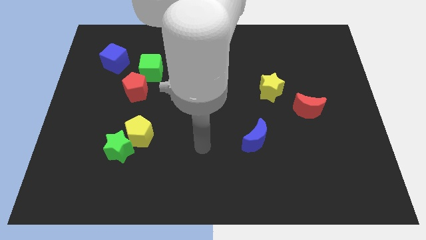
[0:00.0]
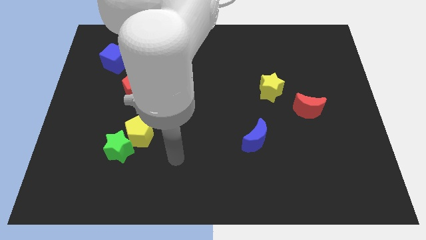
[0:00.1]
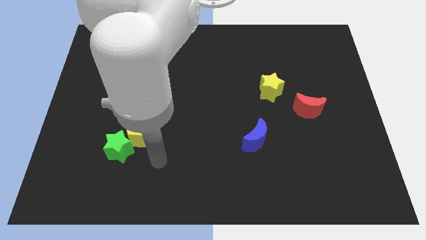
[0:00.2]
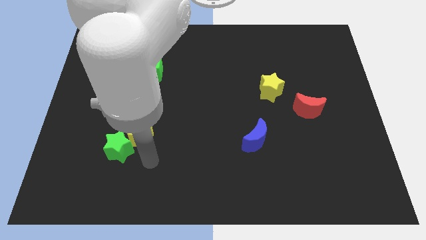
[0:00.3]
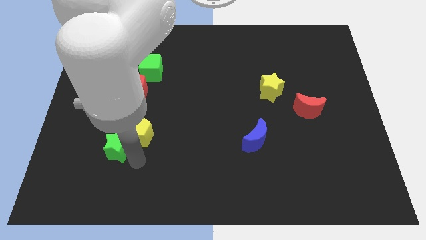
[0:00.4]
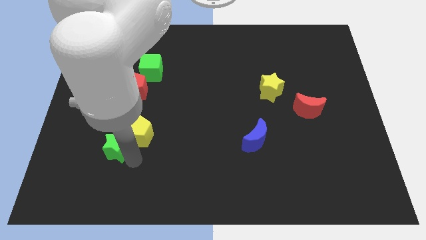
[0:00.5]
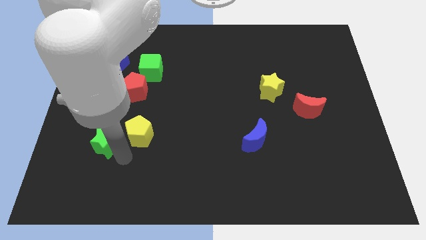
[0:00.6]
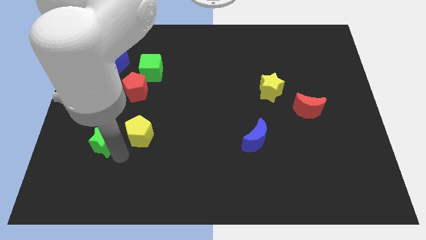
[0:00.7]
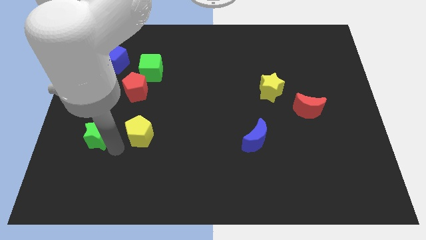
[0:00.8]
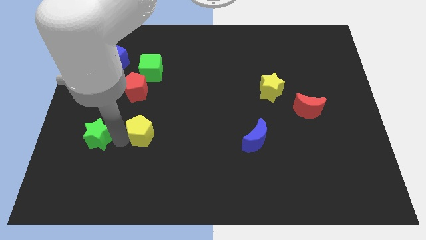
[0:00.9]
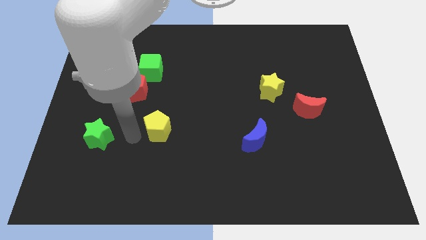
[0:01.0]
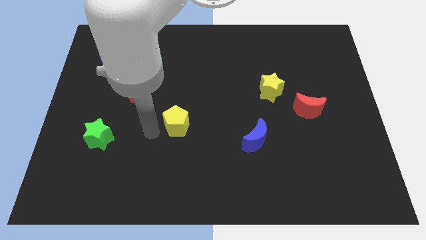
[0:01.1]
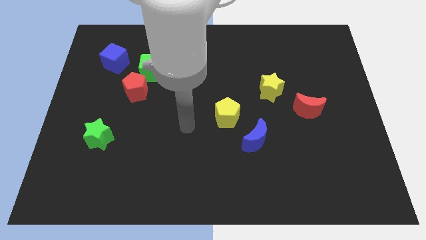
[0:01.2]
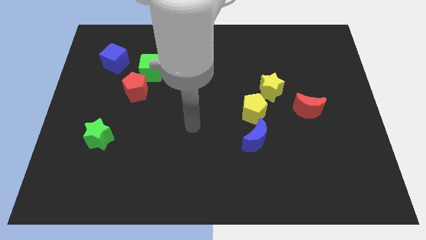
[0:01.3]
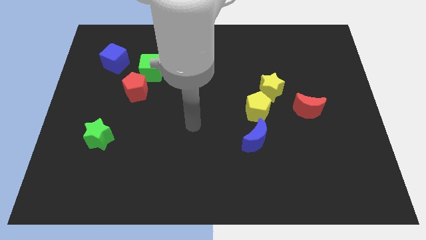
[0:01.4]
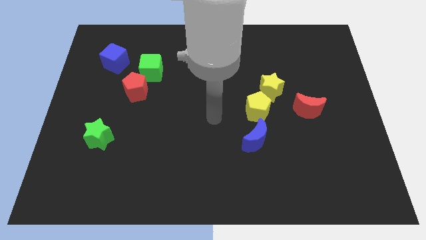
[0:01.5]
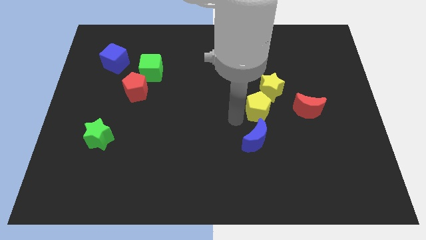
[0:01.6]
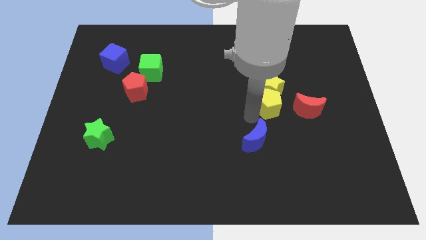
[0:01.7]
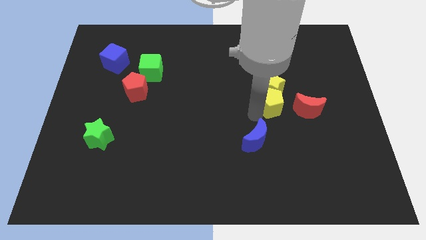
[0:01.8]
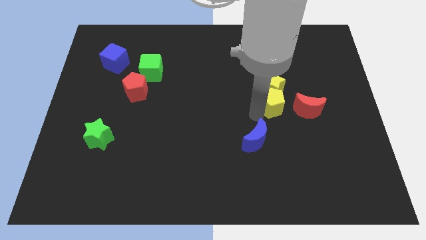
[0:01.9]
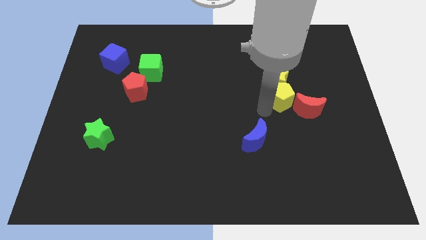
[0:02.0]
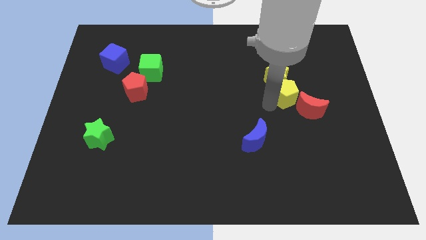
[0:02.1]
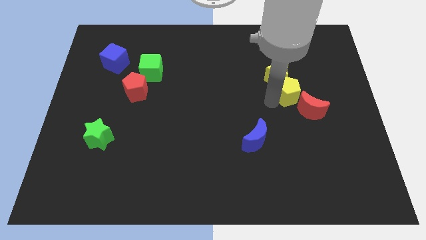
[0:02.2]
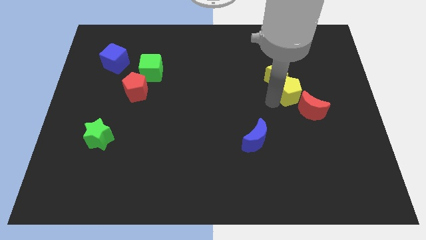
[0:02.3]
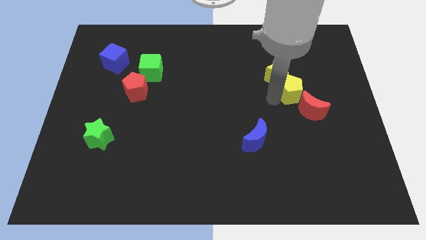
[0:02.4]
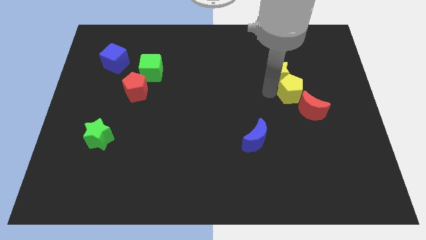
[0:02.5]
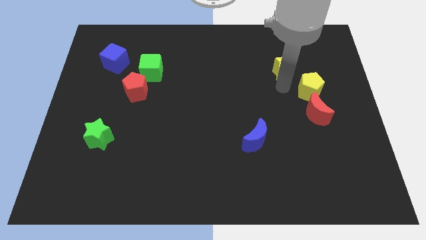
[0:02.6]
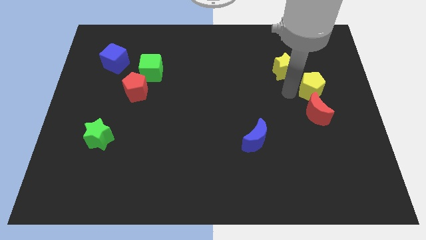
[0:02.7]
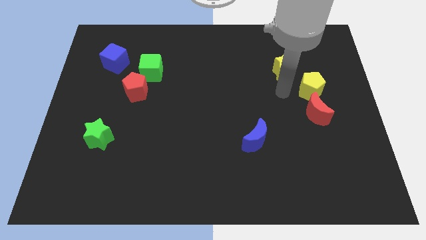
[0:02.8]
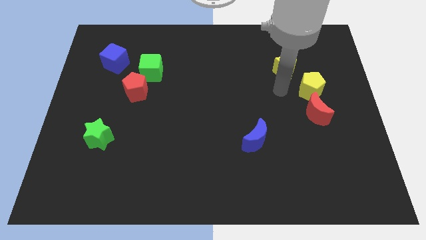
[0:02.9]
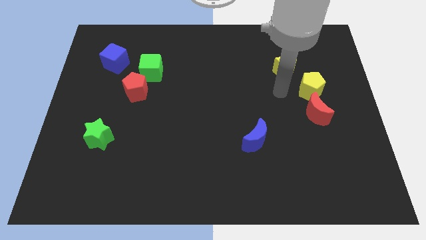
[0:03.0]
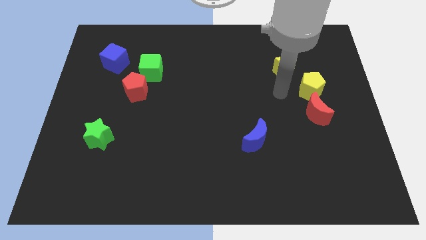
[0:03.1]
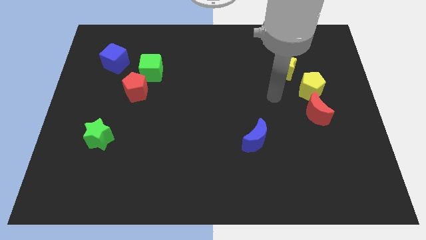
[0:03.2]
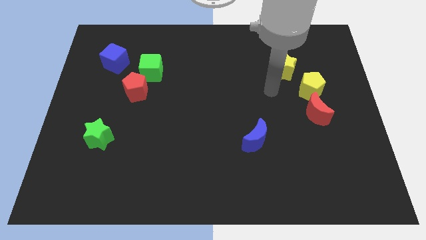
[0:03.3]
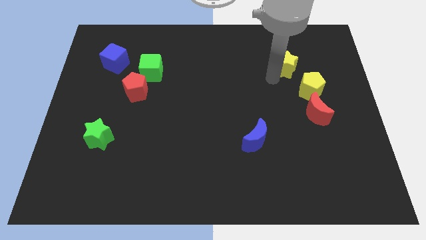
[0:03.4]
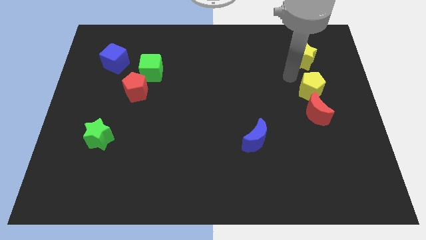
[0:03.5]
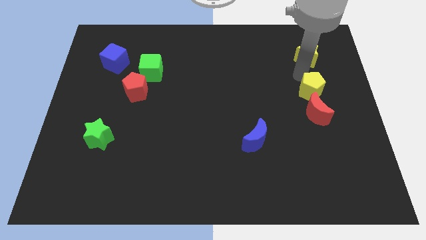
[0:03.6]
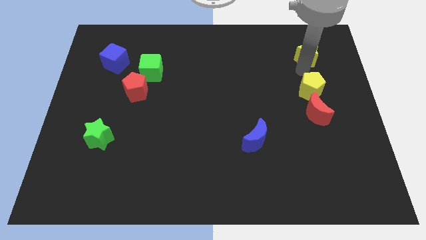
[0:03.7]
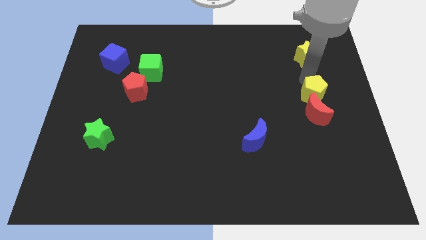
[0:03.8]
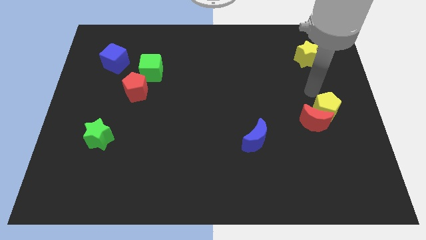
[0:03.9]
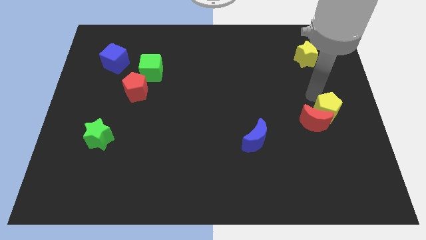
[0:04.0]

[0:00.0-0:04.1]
slide the yellow pentagon next to the red moon

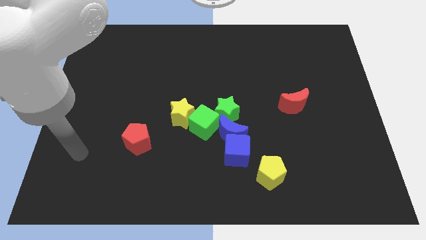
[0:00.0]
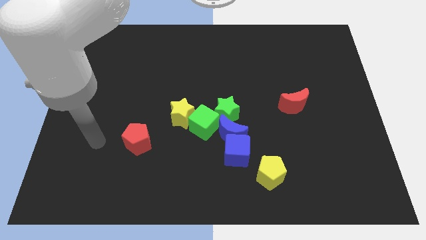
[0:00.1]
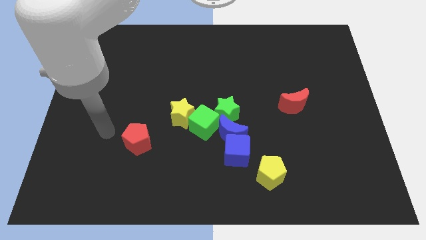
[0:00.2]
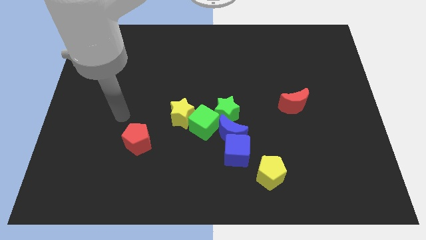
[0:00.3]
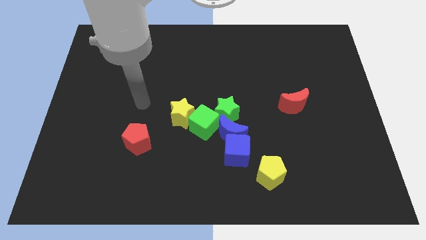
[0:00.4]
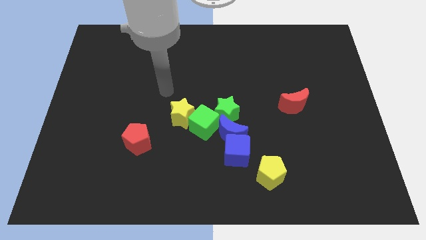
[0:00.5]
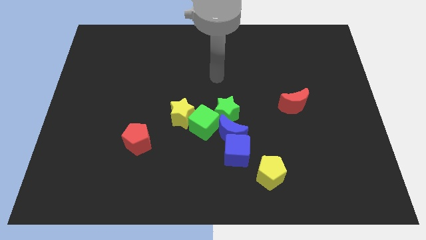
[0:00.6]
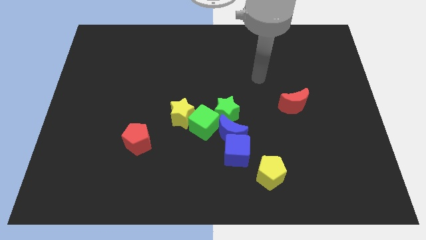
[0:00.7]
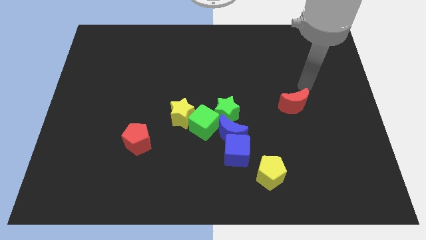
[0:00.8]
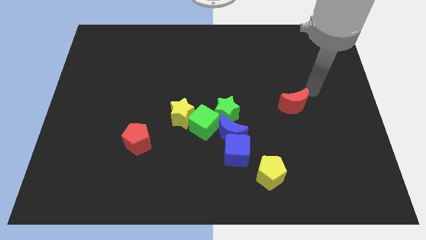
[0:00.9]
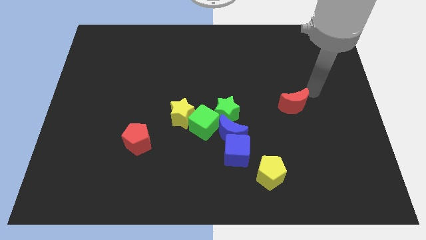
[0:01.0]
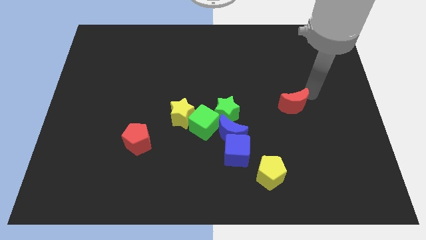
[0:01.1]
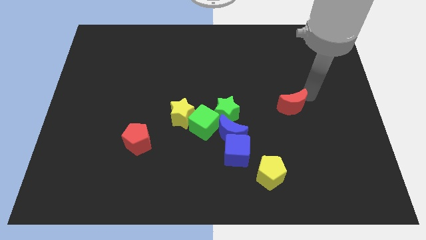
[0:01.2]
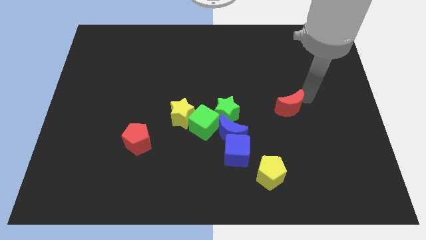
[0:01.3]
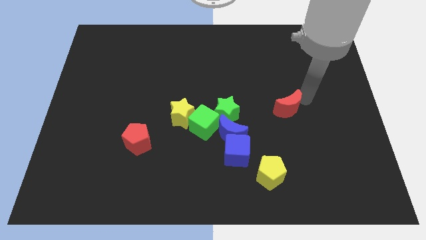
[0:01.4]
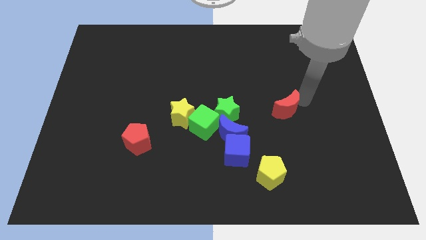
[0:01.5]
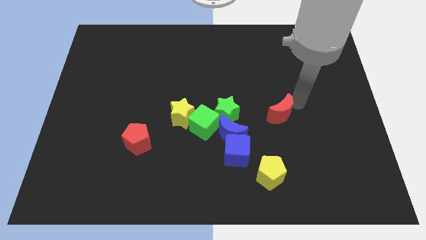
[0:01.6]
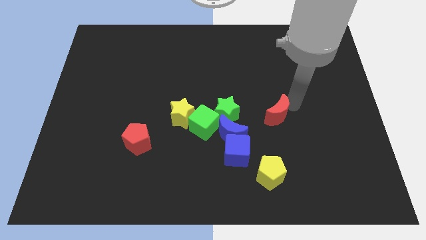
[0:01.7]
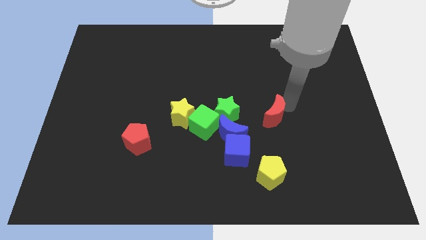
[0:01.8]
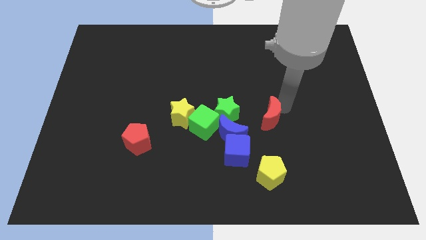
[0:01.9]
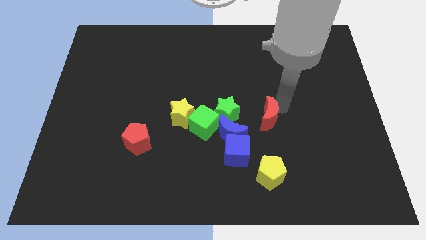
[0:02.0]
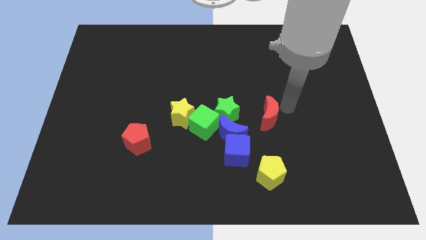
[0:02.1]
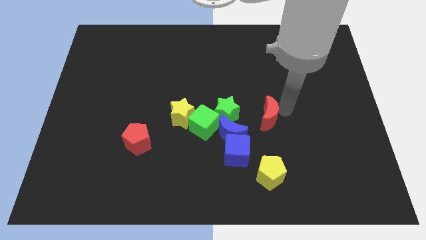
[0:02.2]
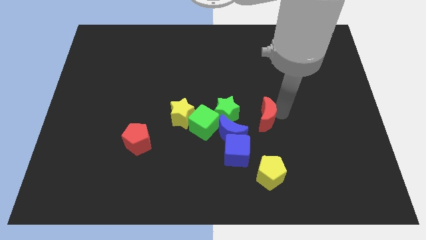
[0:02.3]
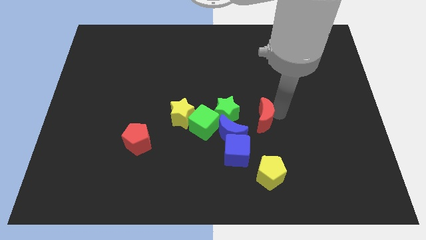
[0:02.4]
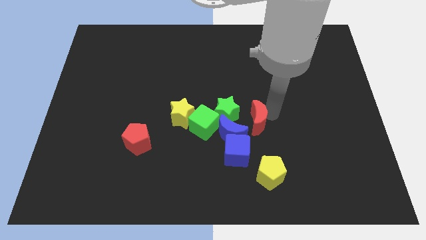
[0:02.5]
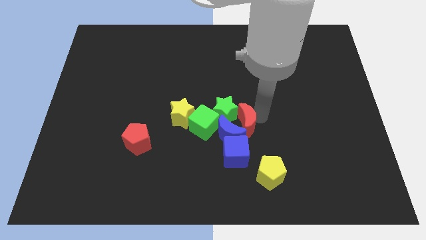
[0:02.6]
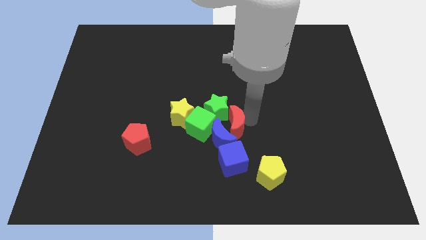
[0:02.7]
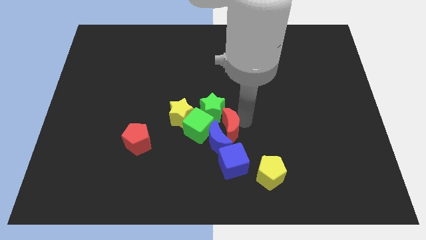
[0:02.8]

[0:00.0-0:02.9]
put the red moon towards the blue moon

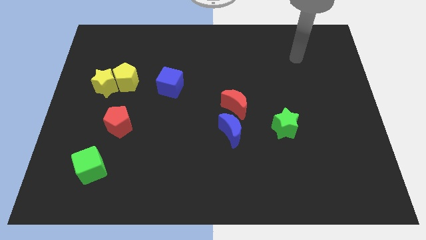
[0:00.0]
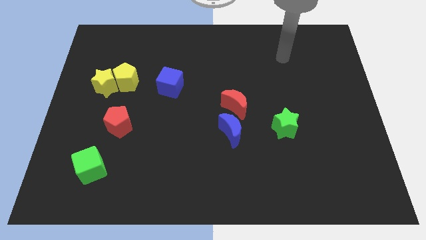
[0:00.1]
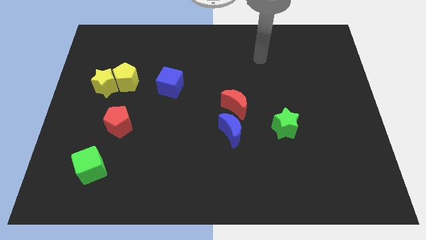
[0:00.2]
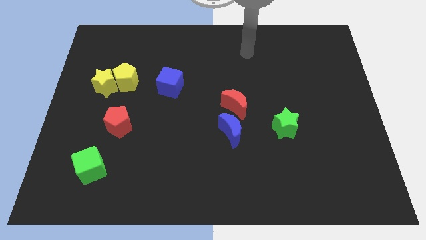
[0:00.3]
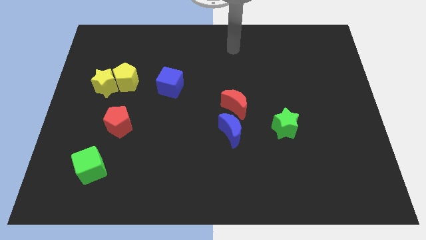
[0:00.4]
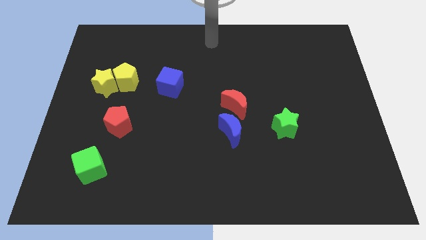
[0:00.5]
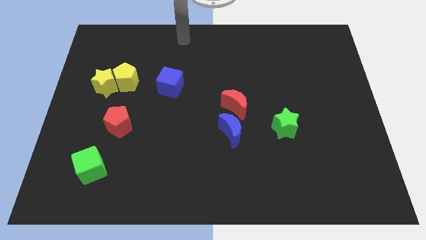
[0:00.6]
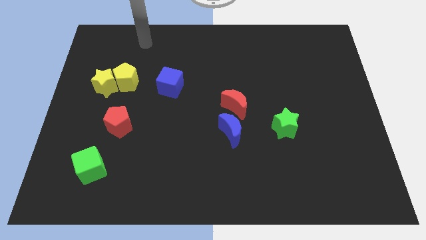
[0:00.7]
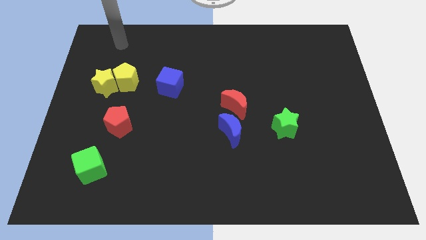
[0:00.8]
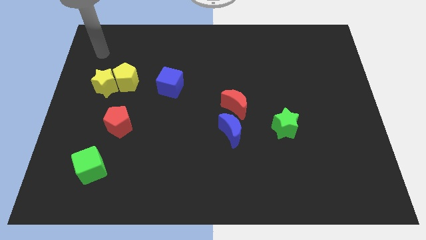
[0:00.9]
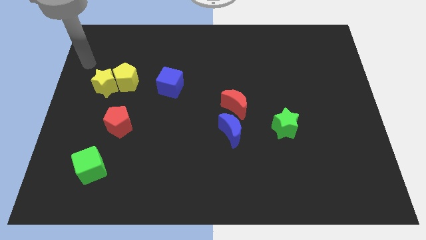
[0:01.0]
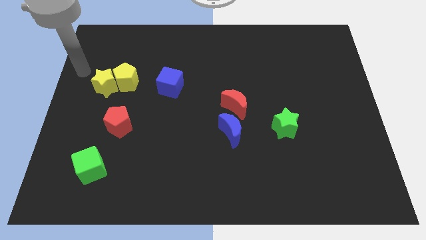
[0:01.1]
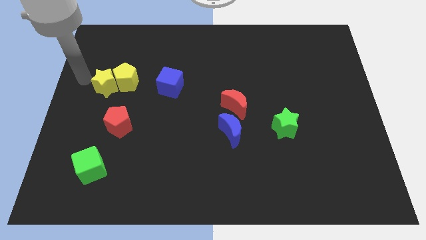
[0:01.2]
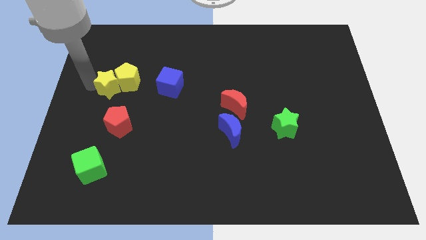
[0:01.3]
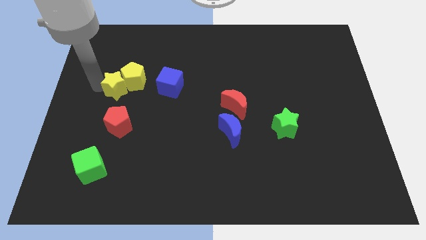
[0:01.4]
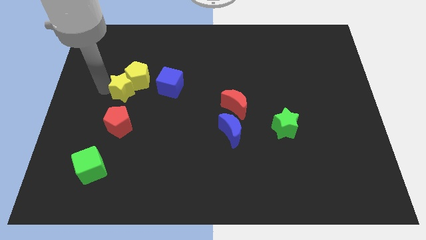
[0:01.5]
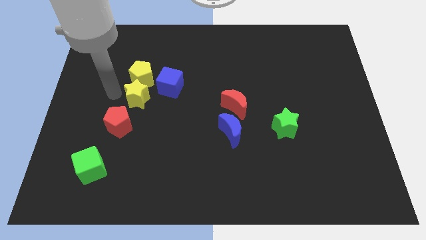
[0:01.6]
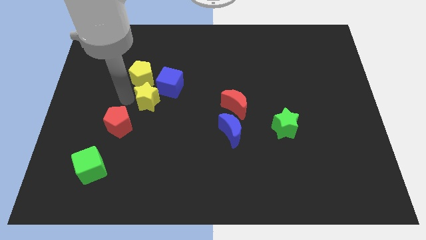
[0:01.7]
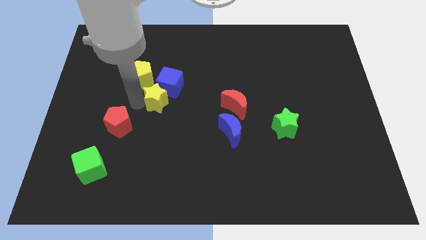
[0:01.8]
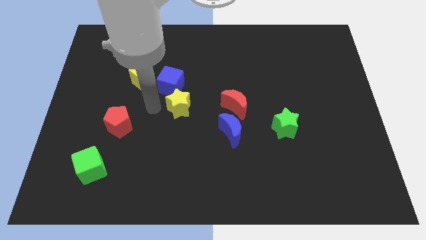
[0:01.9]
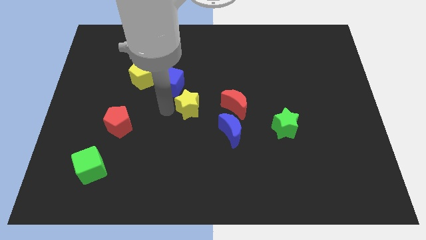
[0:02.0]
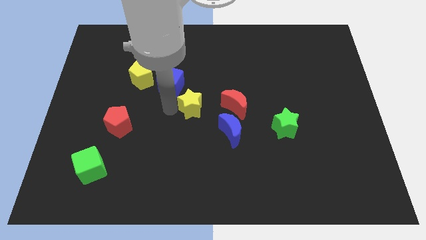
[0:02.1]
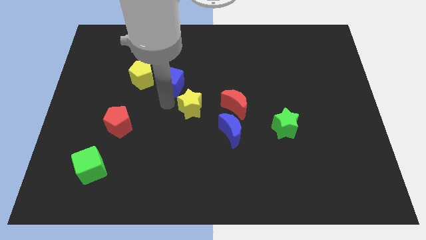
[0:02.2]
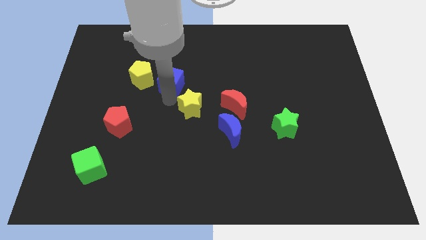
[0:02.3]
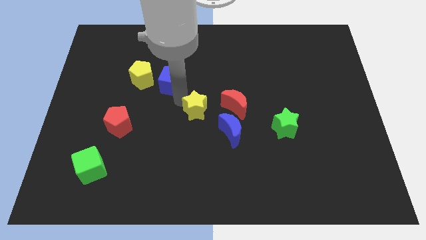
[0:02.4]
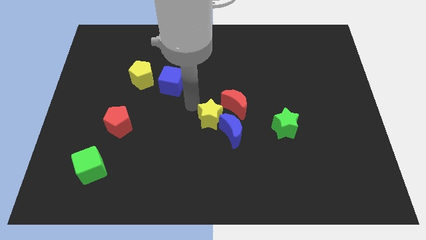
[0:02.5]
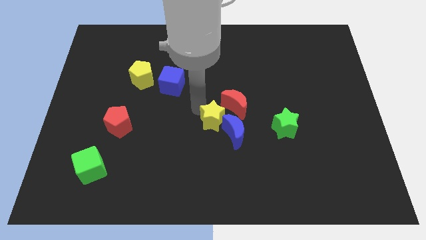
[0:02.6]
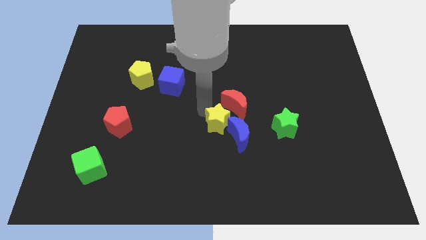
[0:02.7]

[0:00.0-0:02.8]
move the yellow star to the blue moon
